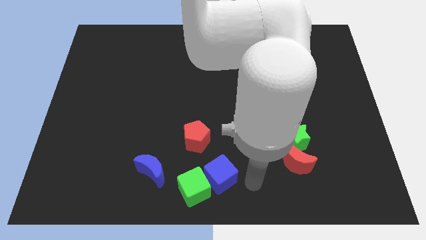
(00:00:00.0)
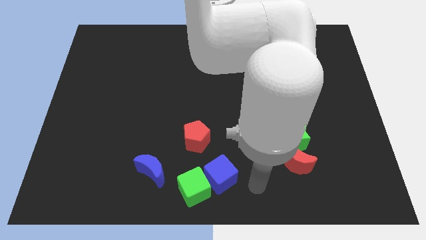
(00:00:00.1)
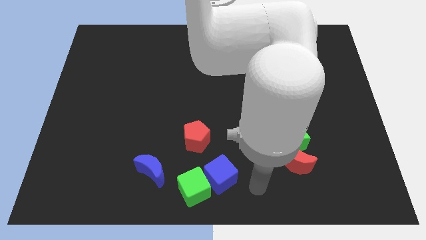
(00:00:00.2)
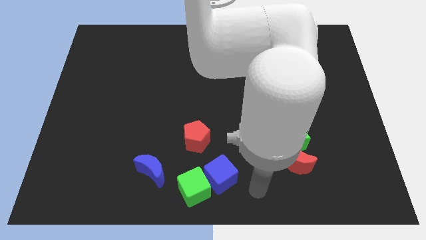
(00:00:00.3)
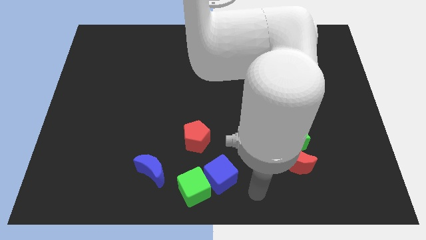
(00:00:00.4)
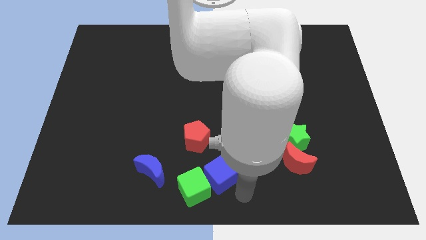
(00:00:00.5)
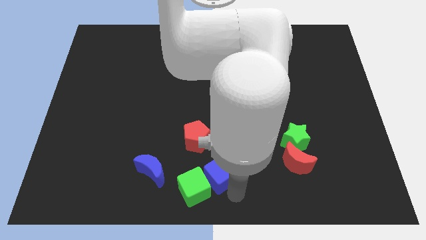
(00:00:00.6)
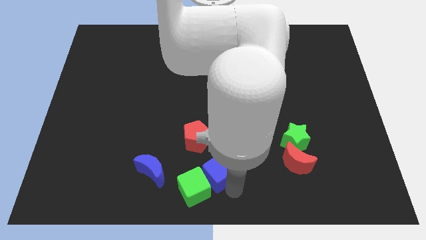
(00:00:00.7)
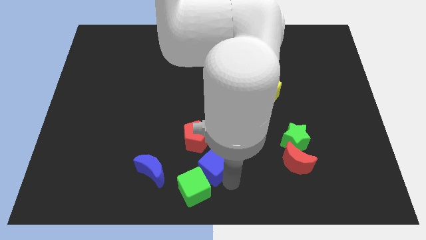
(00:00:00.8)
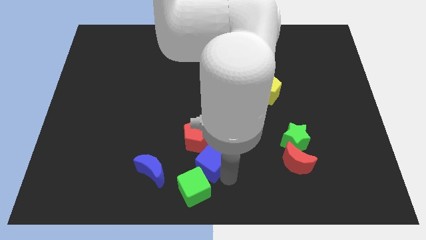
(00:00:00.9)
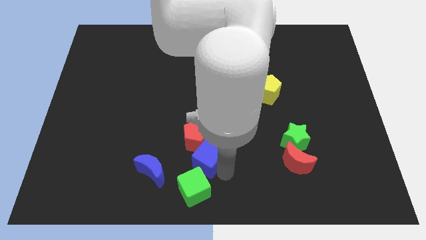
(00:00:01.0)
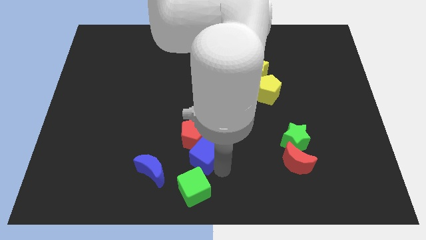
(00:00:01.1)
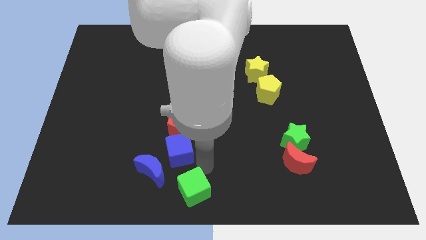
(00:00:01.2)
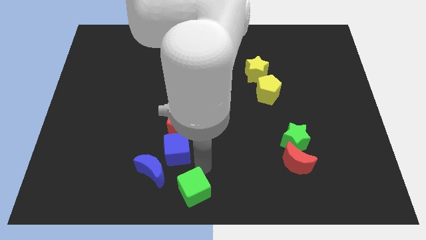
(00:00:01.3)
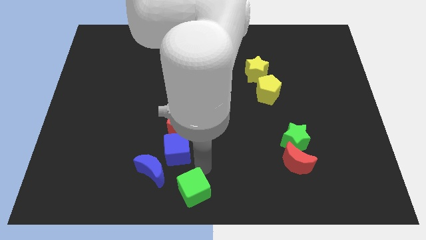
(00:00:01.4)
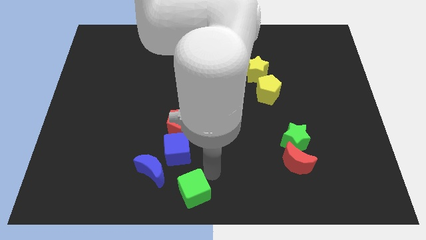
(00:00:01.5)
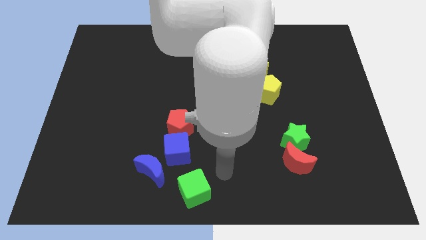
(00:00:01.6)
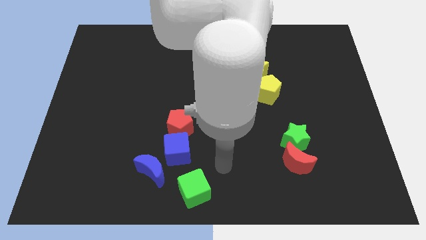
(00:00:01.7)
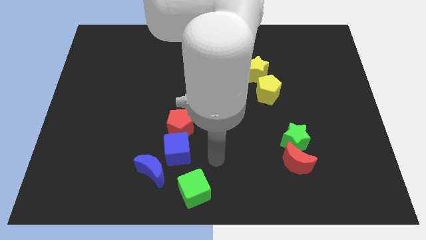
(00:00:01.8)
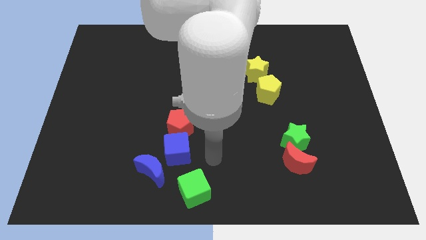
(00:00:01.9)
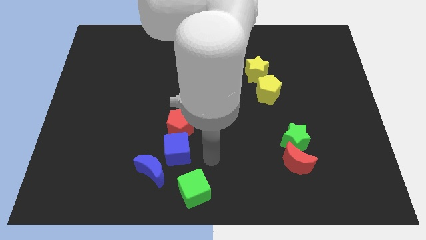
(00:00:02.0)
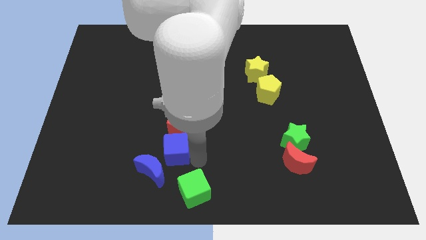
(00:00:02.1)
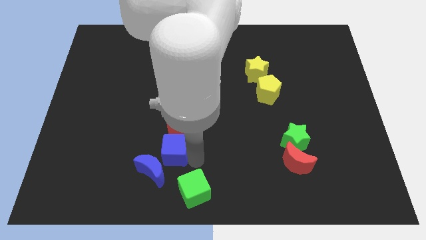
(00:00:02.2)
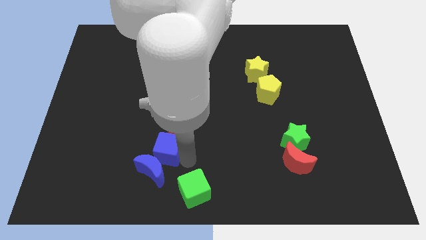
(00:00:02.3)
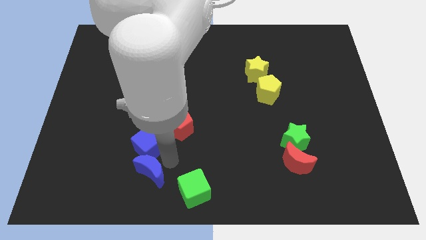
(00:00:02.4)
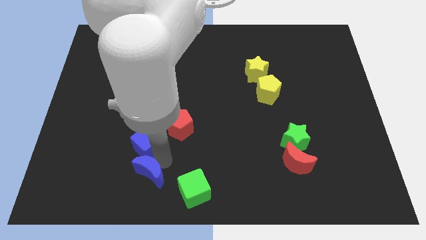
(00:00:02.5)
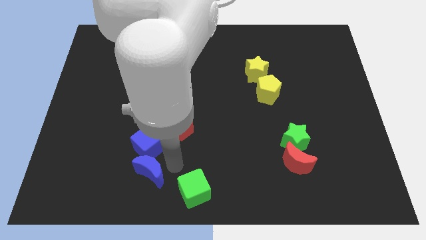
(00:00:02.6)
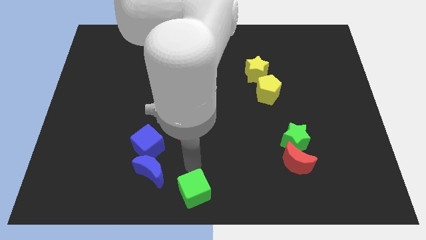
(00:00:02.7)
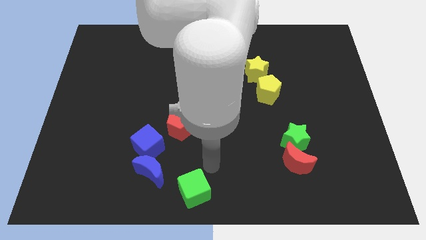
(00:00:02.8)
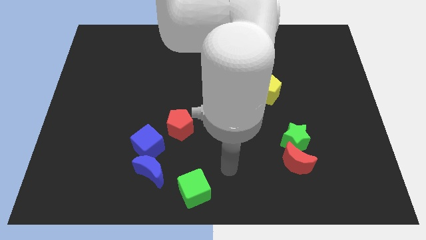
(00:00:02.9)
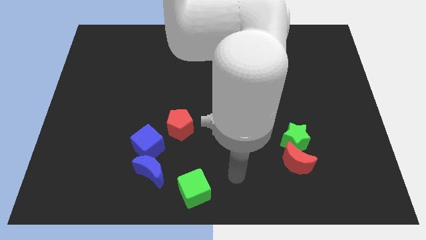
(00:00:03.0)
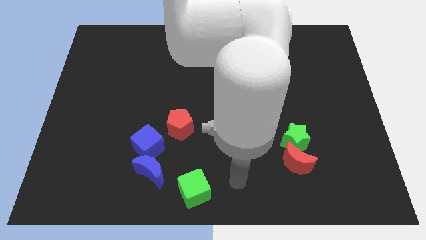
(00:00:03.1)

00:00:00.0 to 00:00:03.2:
push the blue cube to the top of the blue crescent

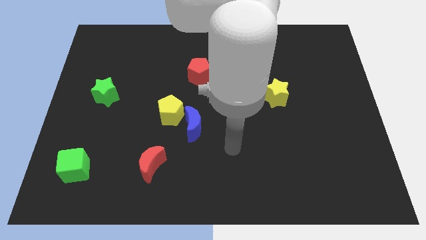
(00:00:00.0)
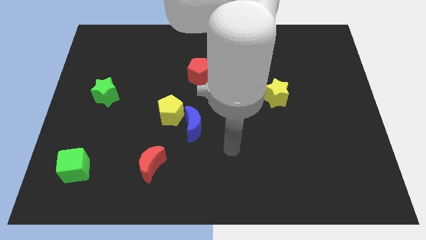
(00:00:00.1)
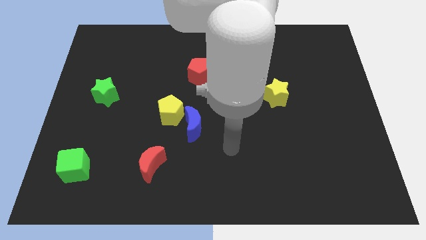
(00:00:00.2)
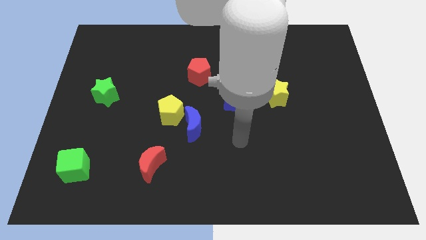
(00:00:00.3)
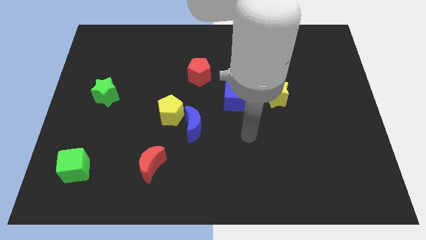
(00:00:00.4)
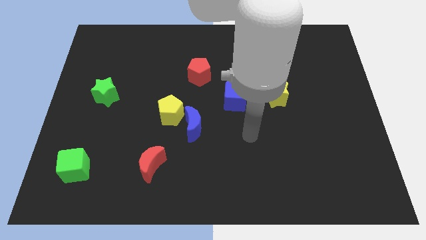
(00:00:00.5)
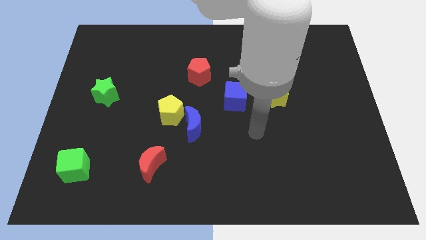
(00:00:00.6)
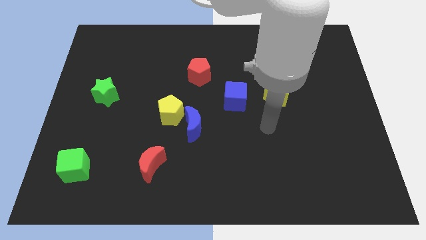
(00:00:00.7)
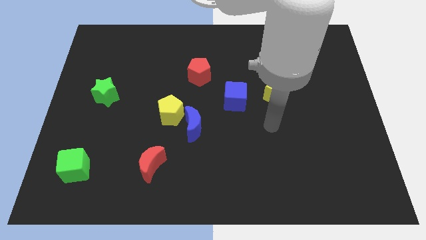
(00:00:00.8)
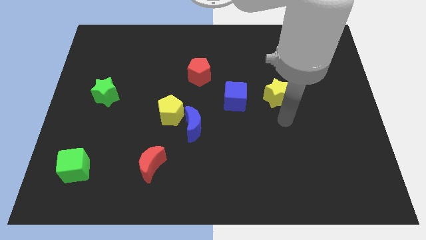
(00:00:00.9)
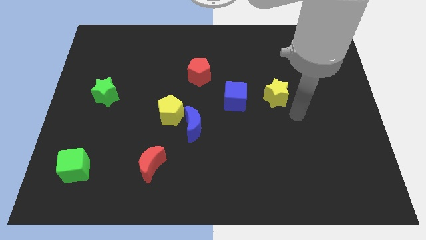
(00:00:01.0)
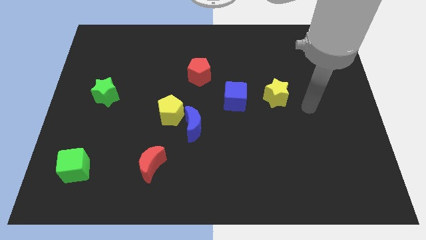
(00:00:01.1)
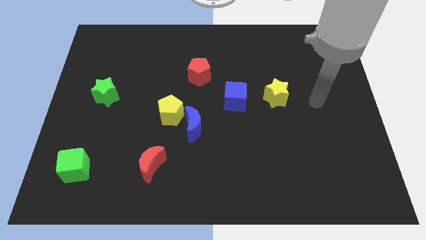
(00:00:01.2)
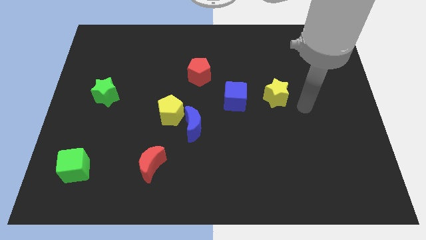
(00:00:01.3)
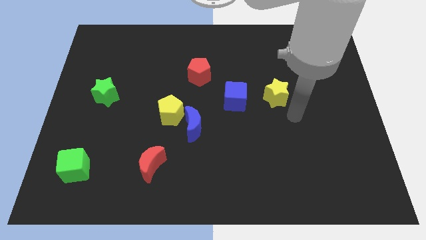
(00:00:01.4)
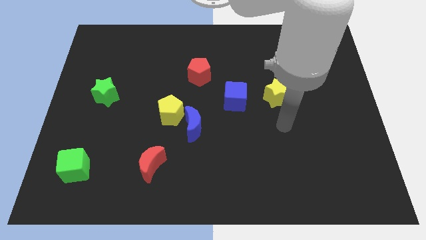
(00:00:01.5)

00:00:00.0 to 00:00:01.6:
place your arm below the yellow star

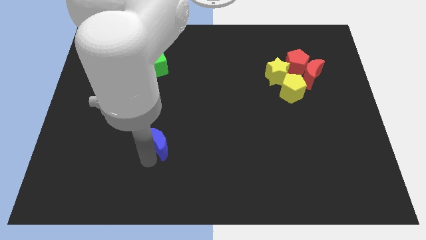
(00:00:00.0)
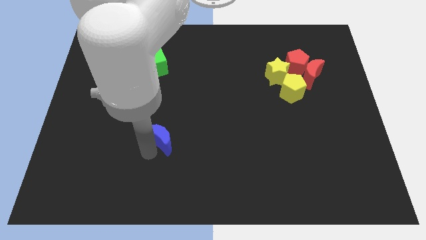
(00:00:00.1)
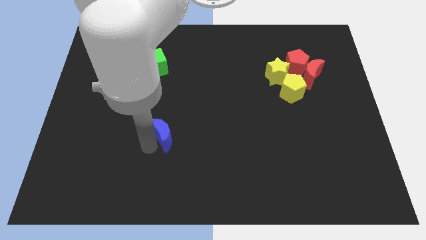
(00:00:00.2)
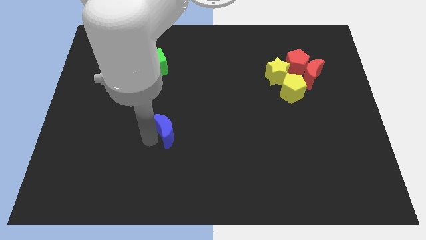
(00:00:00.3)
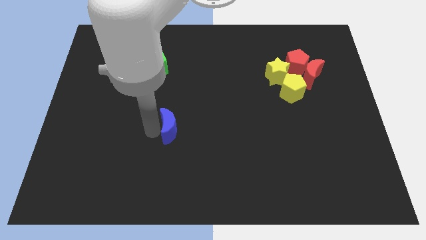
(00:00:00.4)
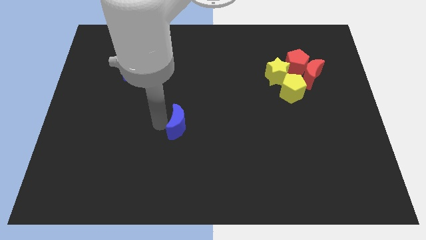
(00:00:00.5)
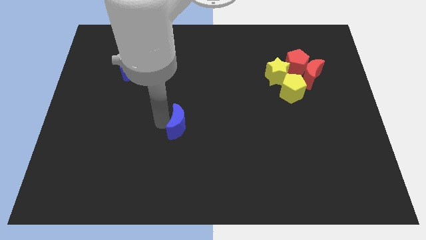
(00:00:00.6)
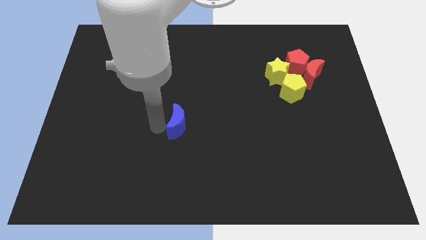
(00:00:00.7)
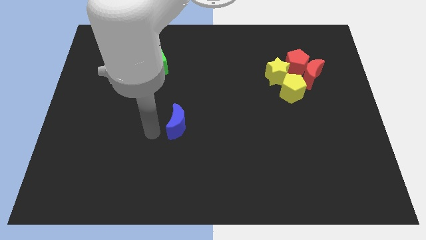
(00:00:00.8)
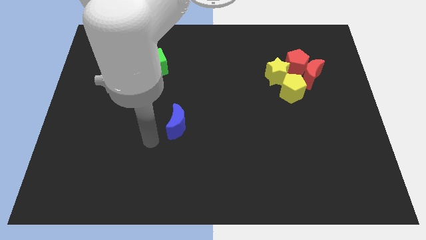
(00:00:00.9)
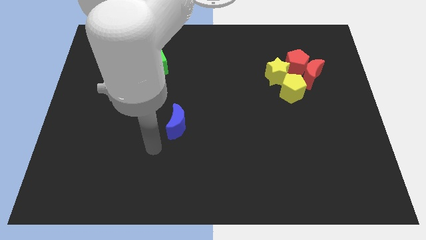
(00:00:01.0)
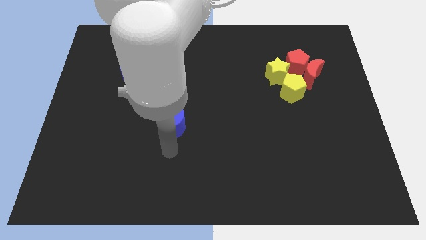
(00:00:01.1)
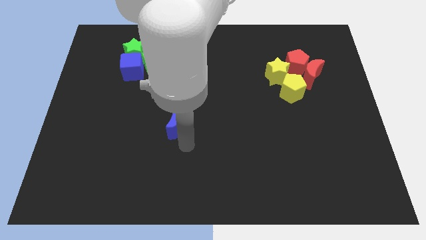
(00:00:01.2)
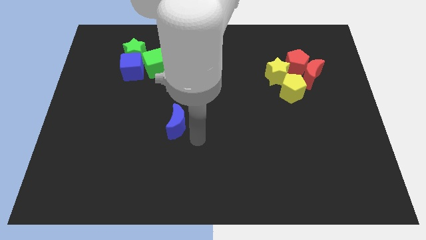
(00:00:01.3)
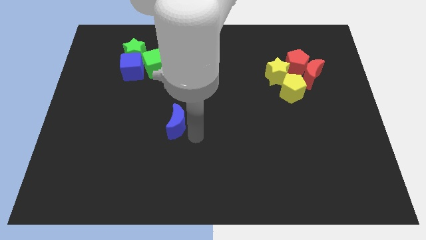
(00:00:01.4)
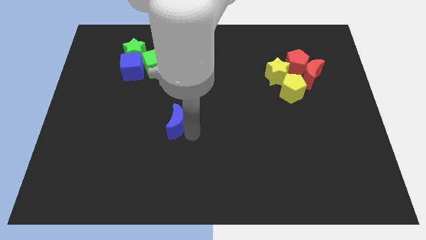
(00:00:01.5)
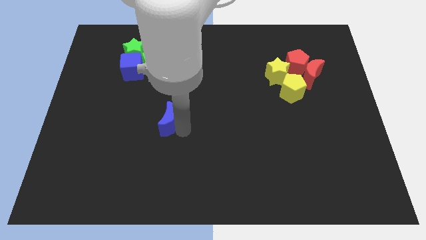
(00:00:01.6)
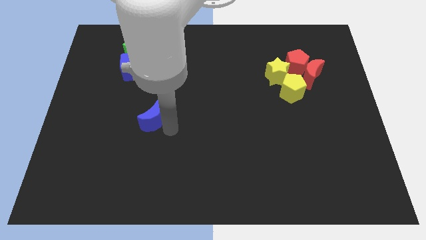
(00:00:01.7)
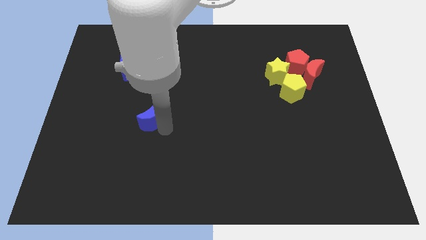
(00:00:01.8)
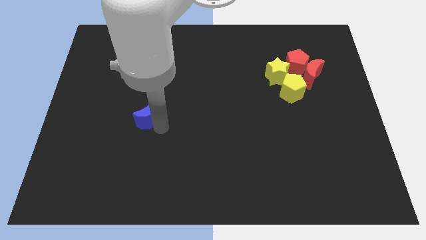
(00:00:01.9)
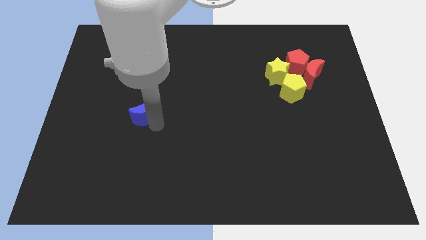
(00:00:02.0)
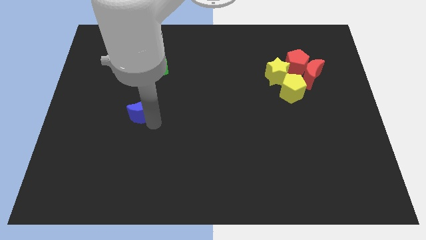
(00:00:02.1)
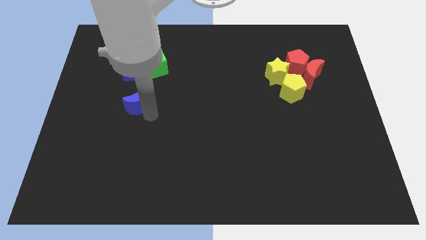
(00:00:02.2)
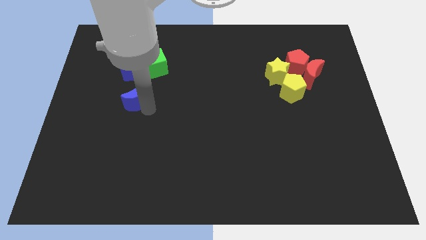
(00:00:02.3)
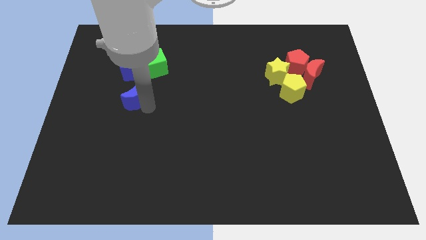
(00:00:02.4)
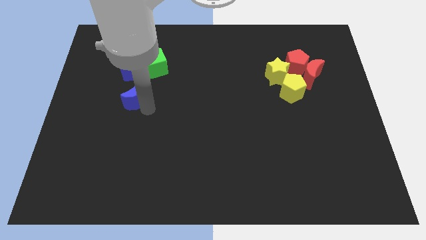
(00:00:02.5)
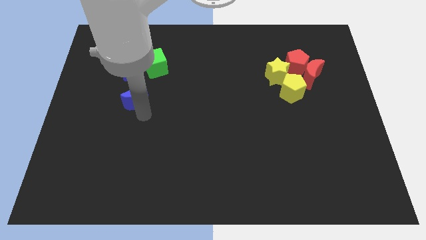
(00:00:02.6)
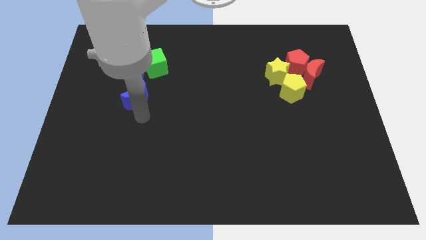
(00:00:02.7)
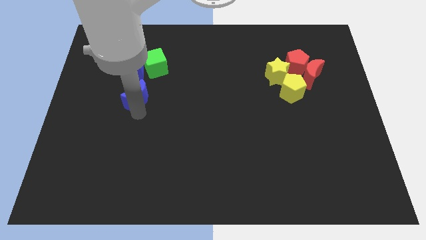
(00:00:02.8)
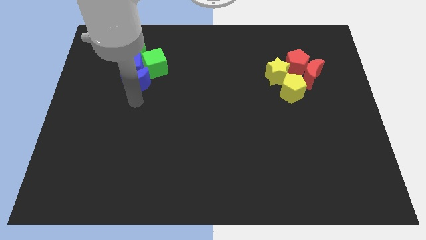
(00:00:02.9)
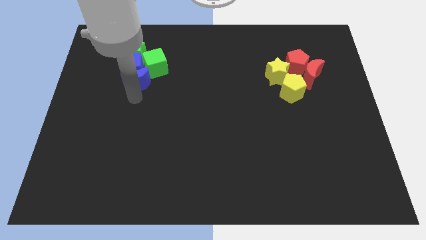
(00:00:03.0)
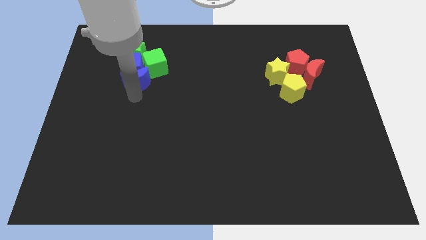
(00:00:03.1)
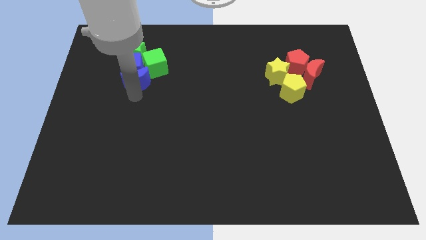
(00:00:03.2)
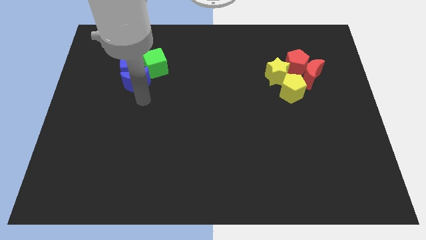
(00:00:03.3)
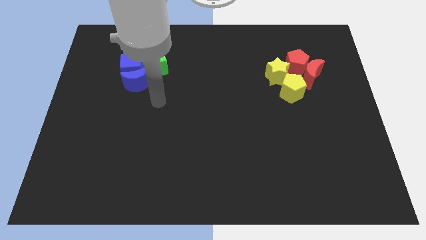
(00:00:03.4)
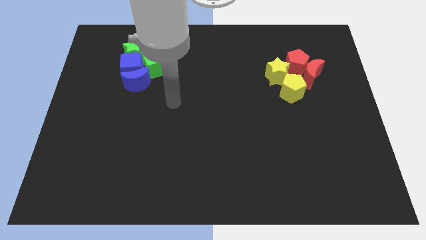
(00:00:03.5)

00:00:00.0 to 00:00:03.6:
place the blue moon below the blue cube

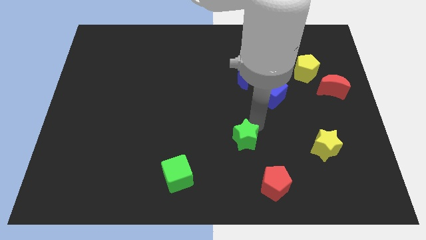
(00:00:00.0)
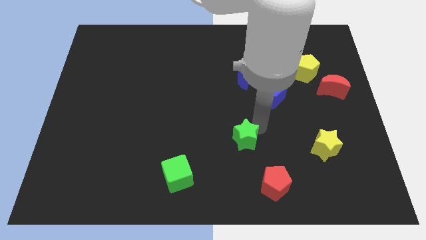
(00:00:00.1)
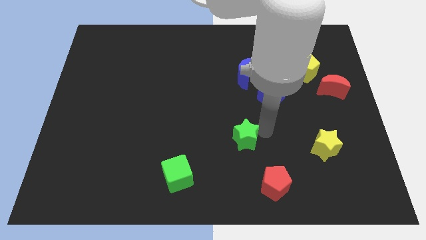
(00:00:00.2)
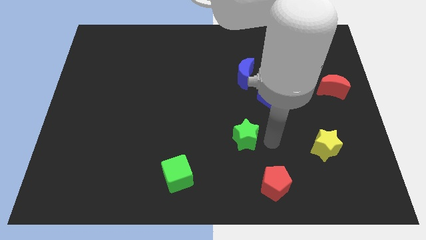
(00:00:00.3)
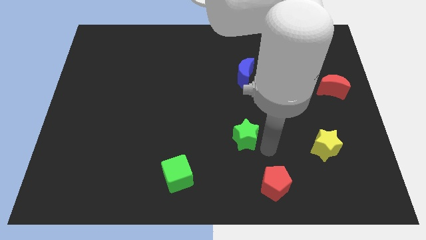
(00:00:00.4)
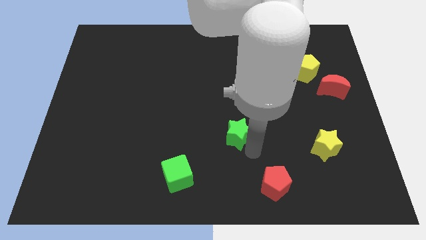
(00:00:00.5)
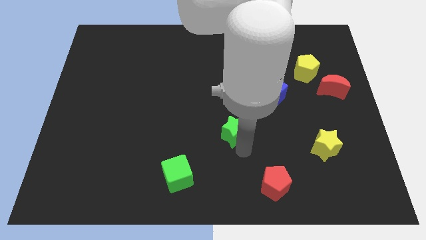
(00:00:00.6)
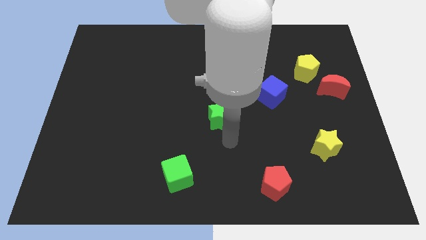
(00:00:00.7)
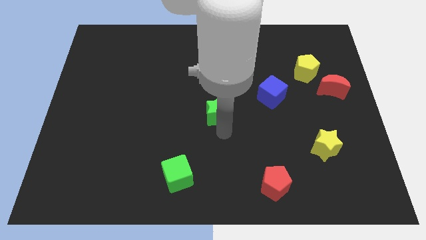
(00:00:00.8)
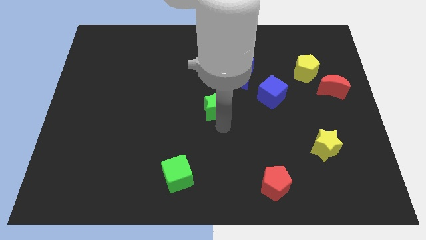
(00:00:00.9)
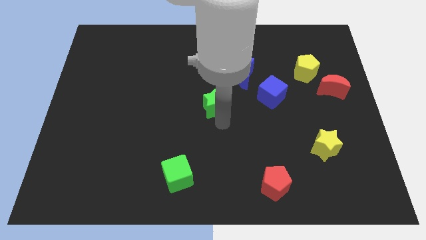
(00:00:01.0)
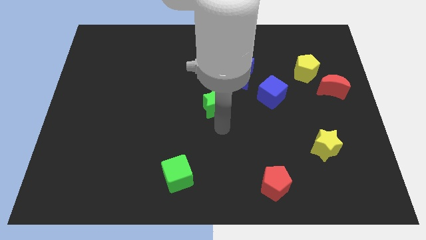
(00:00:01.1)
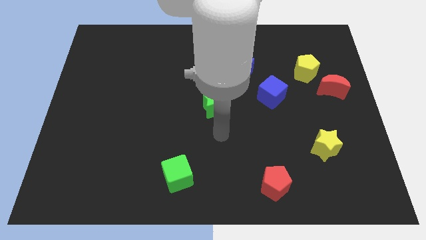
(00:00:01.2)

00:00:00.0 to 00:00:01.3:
push the green star to the top of the board
